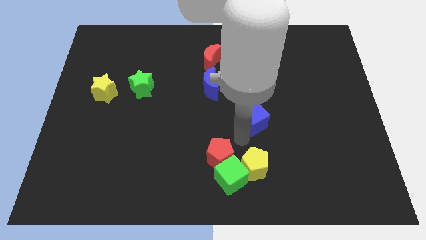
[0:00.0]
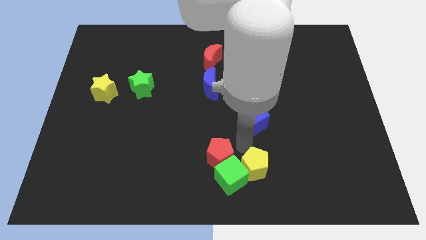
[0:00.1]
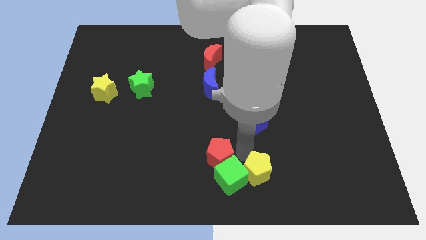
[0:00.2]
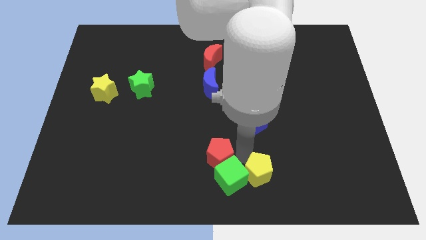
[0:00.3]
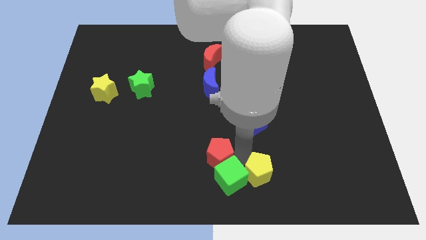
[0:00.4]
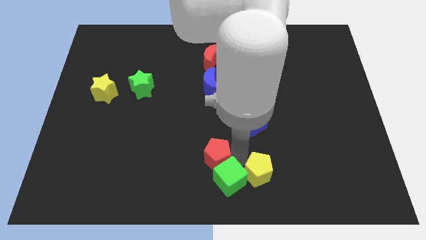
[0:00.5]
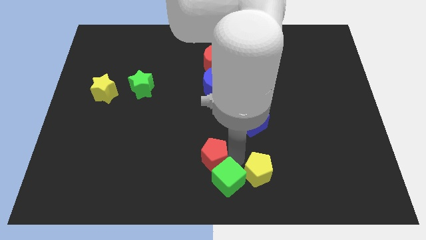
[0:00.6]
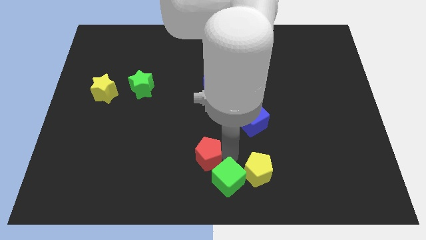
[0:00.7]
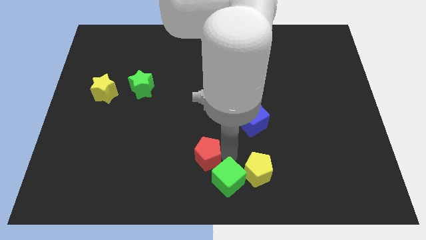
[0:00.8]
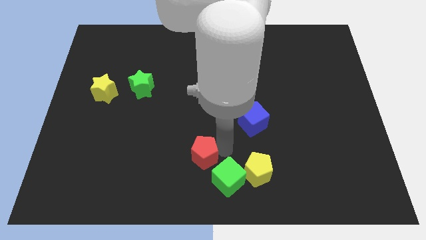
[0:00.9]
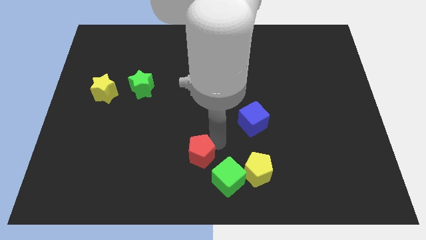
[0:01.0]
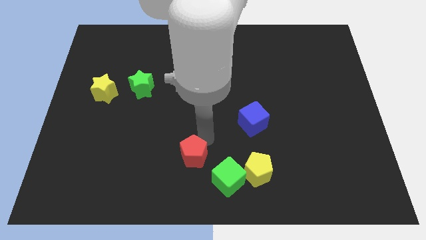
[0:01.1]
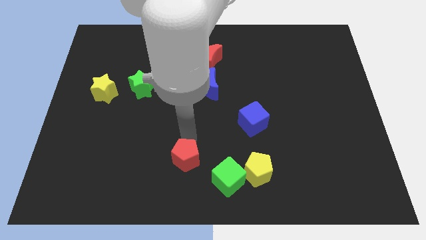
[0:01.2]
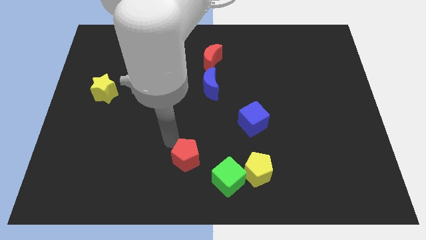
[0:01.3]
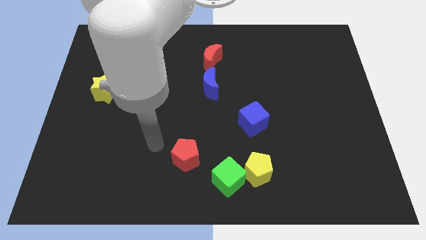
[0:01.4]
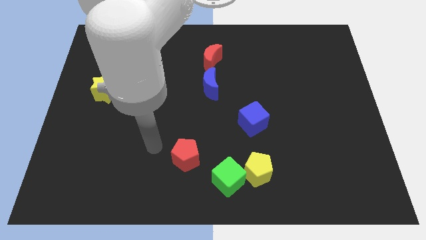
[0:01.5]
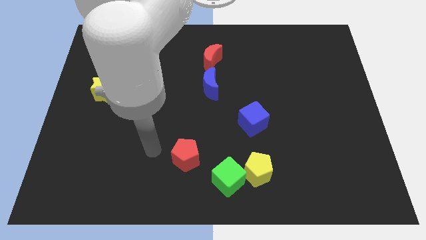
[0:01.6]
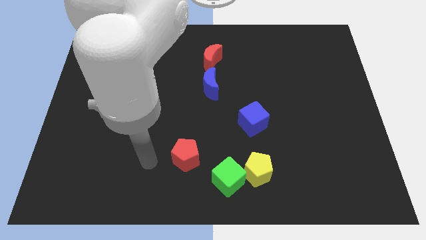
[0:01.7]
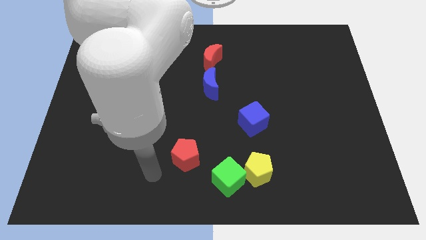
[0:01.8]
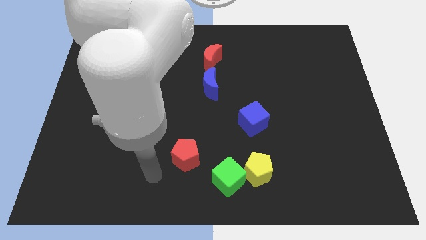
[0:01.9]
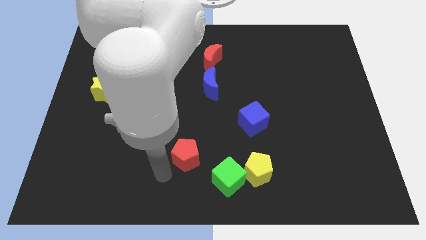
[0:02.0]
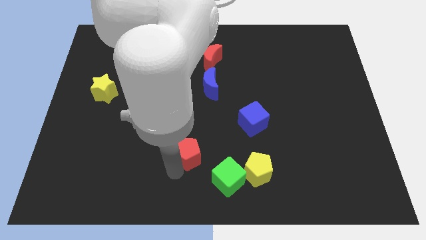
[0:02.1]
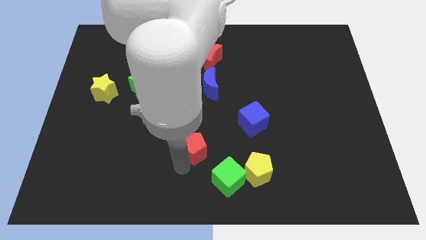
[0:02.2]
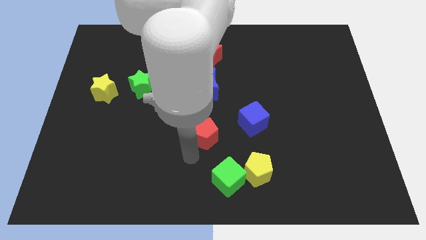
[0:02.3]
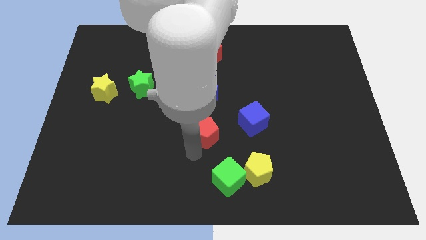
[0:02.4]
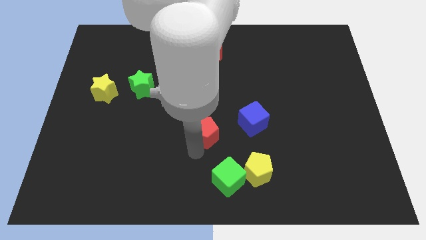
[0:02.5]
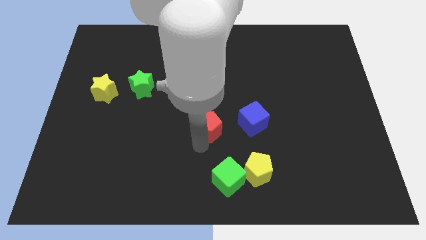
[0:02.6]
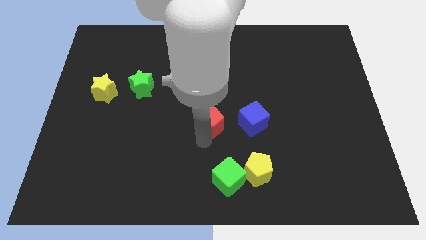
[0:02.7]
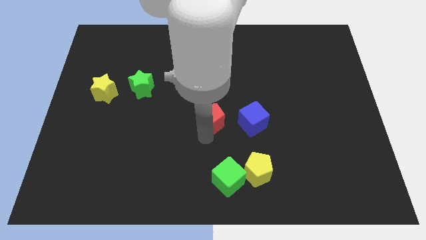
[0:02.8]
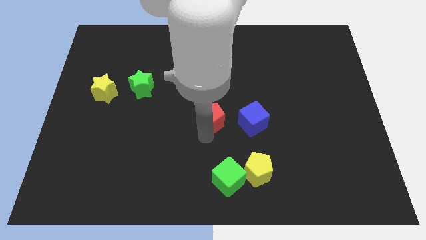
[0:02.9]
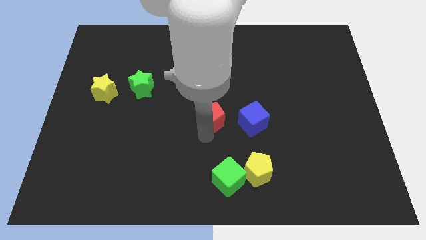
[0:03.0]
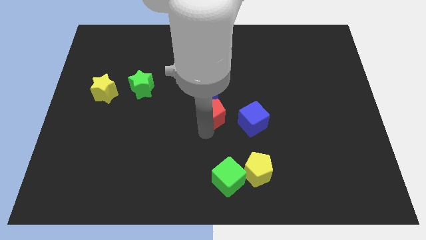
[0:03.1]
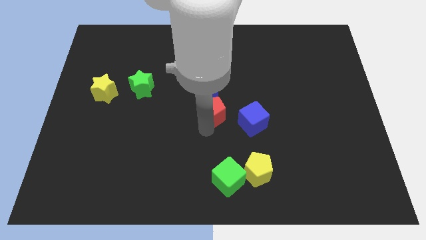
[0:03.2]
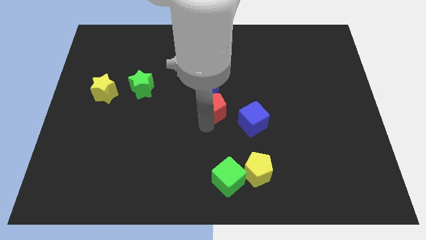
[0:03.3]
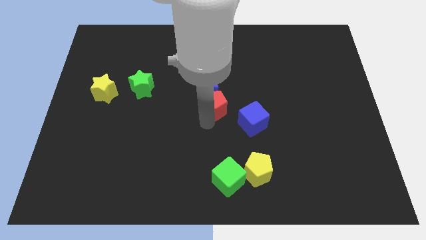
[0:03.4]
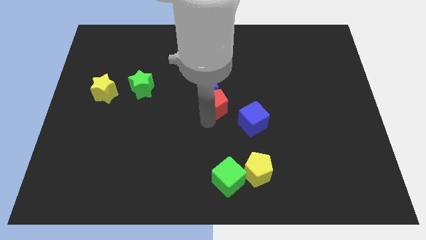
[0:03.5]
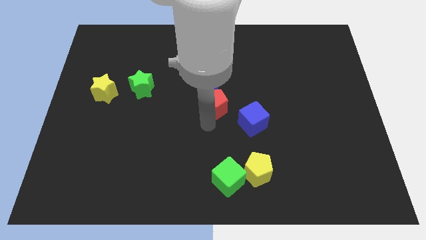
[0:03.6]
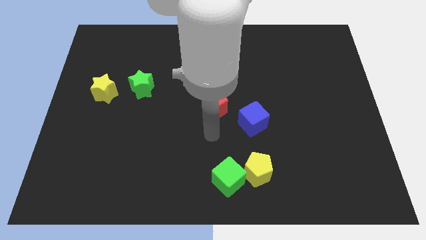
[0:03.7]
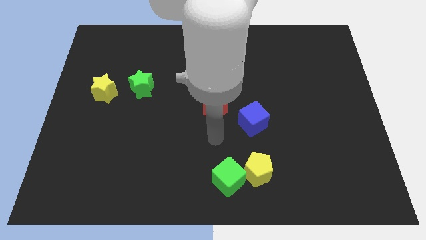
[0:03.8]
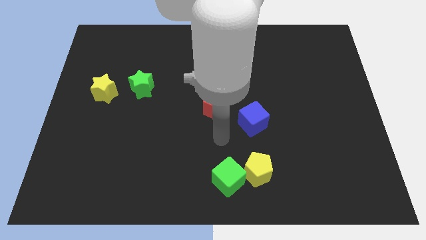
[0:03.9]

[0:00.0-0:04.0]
place the red pentagon at the center of the board

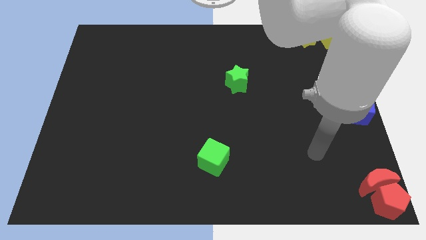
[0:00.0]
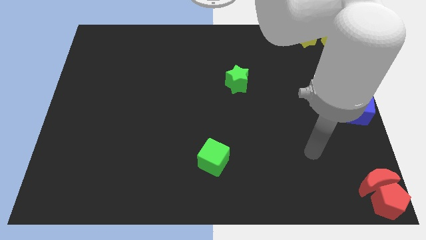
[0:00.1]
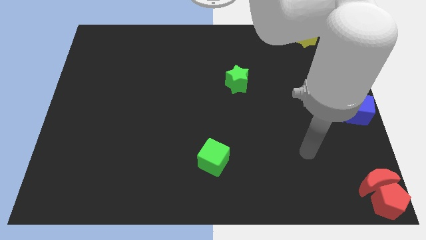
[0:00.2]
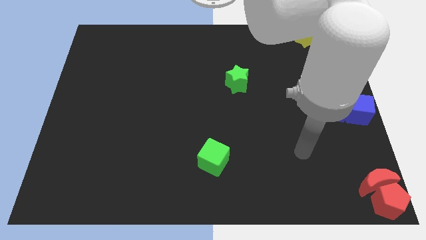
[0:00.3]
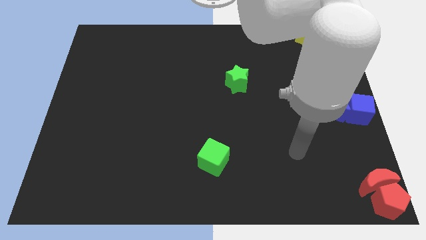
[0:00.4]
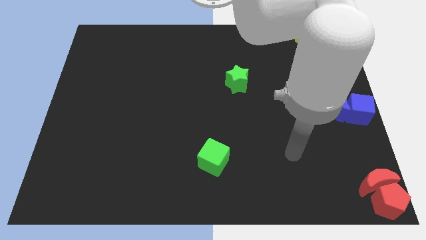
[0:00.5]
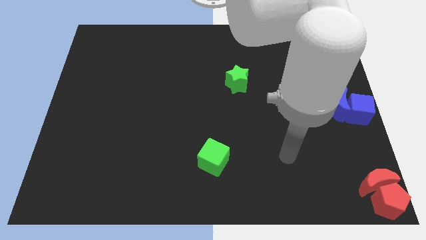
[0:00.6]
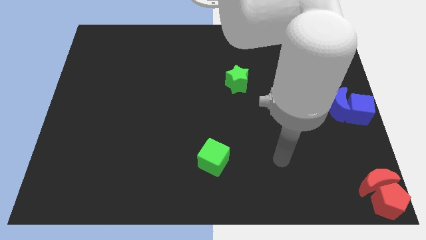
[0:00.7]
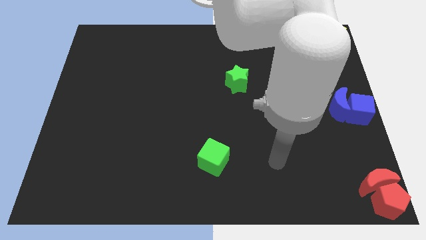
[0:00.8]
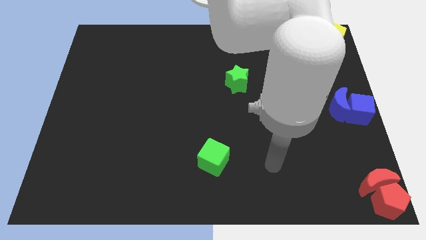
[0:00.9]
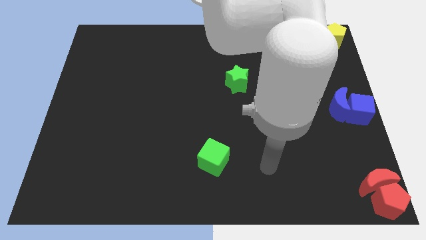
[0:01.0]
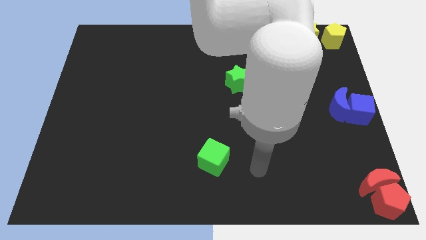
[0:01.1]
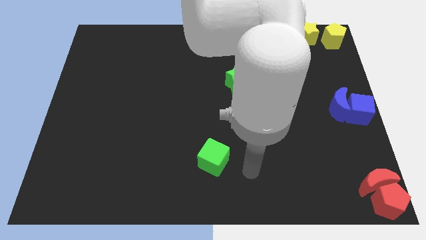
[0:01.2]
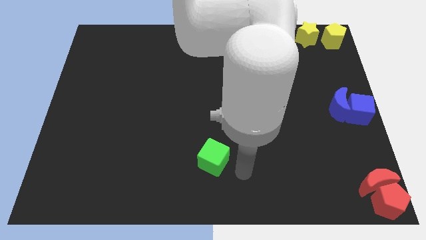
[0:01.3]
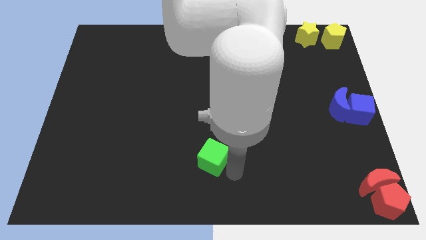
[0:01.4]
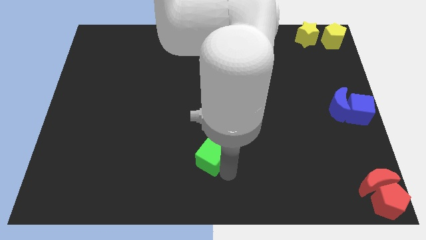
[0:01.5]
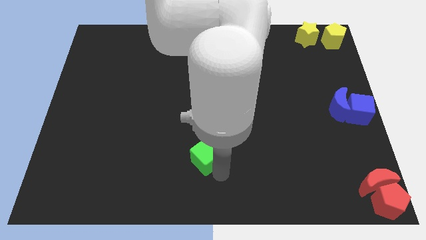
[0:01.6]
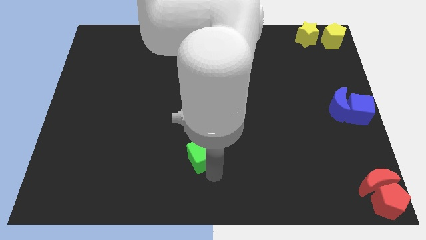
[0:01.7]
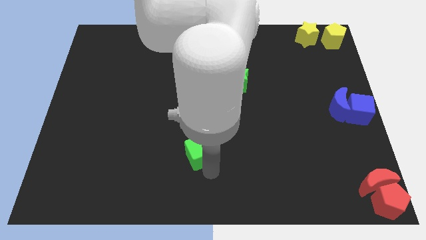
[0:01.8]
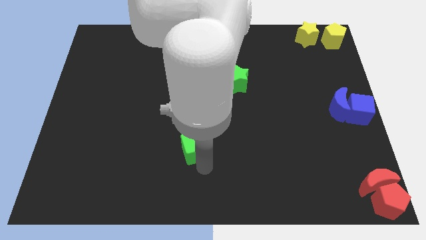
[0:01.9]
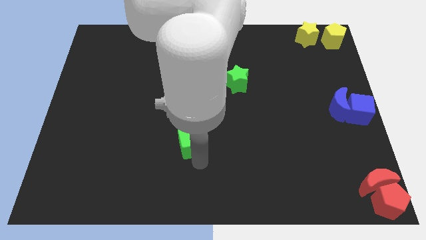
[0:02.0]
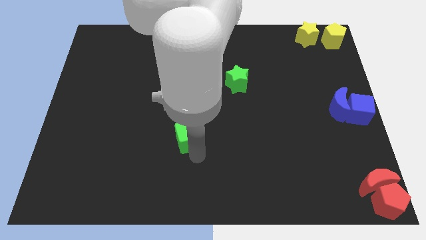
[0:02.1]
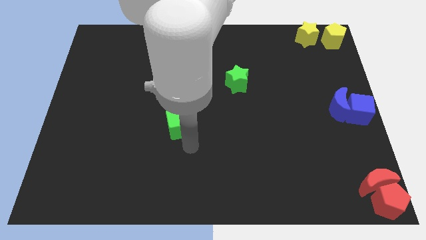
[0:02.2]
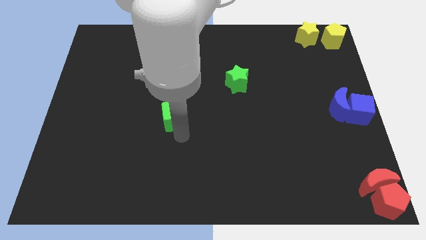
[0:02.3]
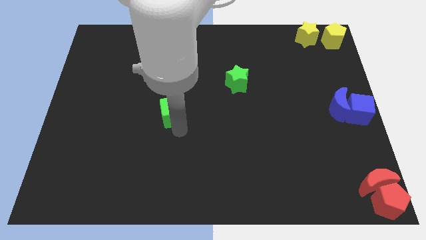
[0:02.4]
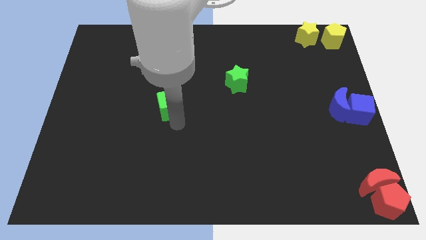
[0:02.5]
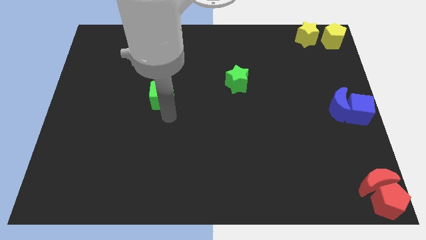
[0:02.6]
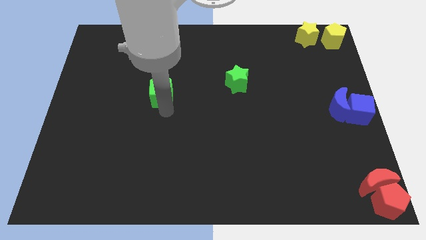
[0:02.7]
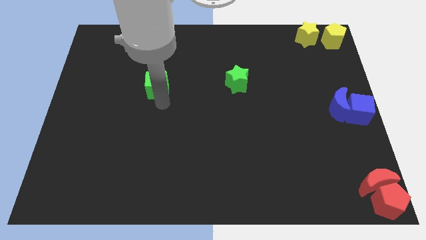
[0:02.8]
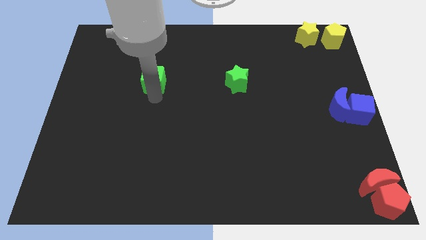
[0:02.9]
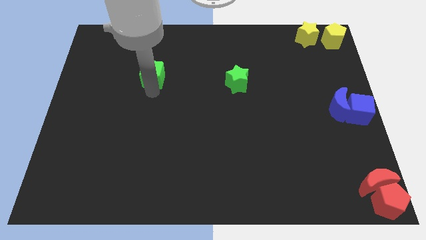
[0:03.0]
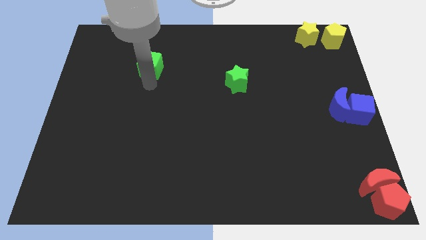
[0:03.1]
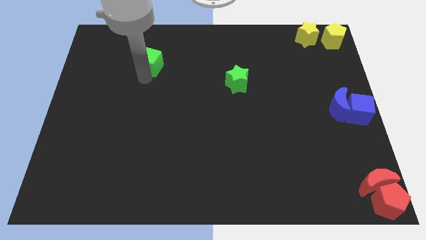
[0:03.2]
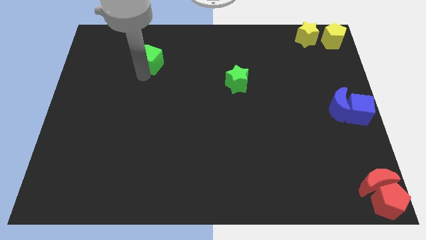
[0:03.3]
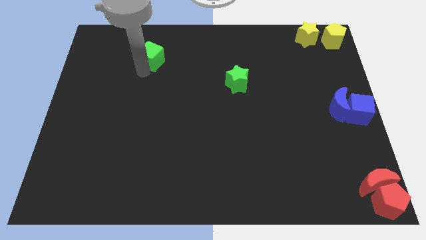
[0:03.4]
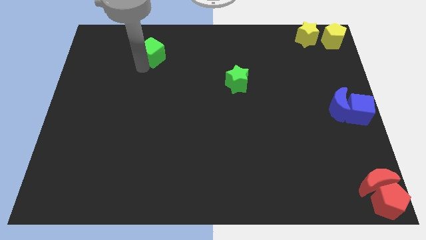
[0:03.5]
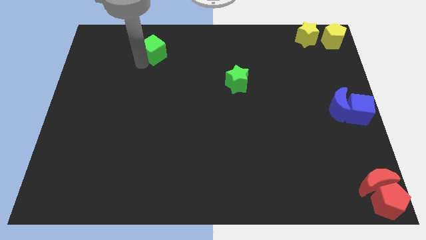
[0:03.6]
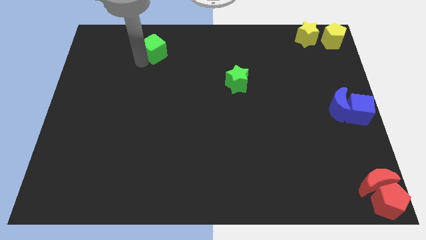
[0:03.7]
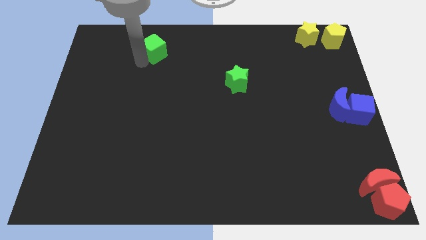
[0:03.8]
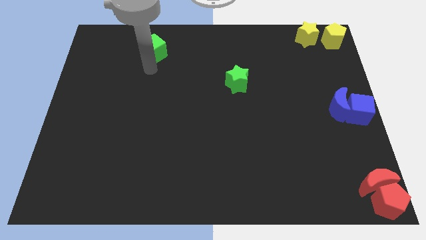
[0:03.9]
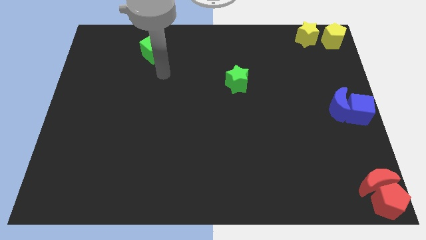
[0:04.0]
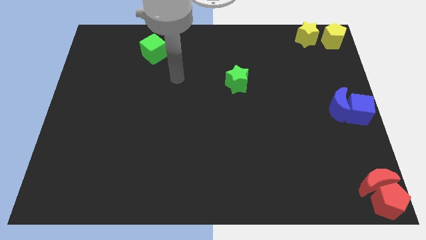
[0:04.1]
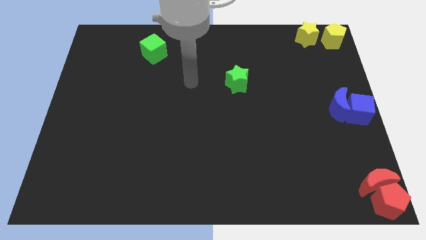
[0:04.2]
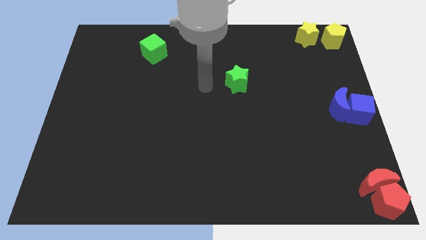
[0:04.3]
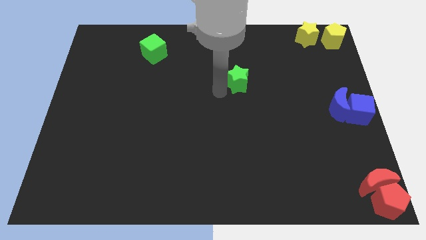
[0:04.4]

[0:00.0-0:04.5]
slide green cube to the top left of the board

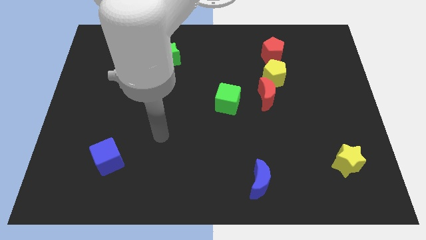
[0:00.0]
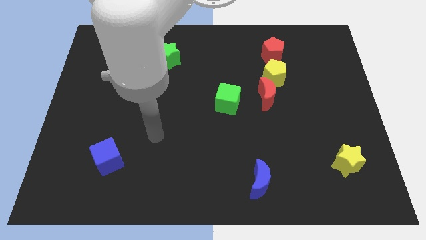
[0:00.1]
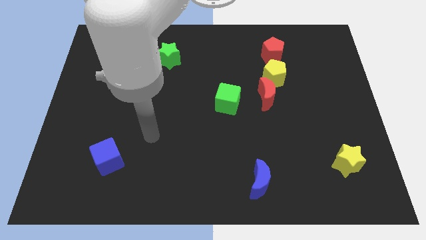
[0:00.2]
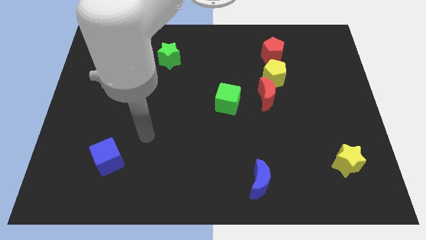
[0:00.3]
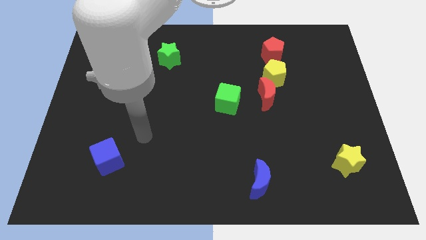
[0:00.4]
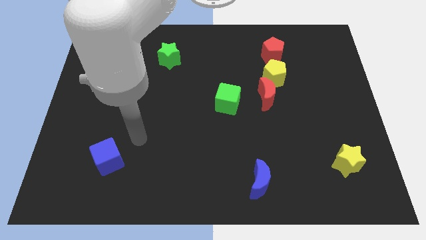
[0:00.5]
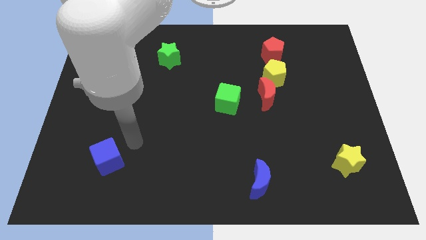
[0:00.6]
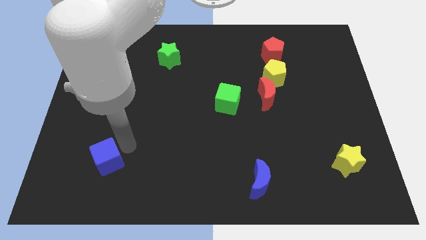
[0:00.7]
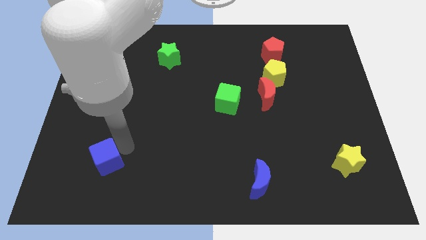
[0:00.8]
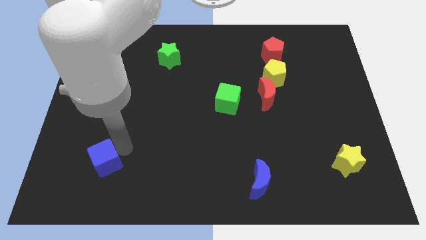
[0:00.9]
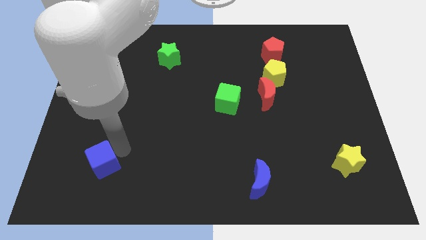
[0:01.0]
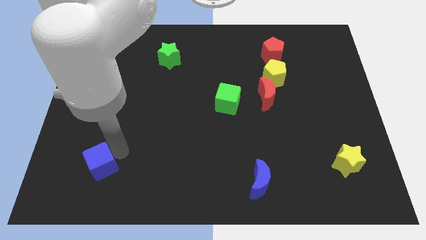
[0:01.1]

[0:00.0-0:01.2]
touch the blue cube
